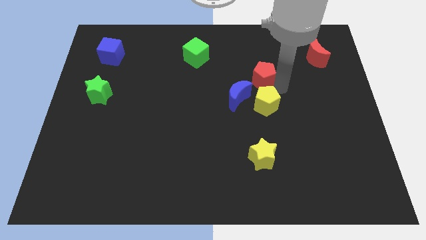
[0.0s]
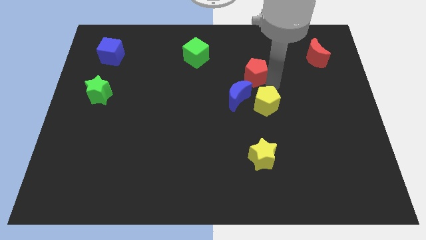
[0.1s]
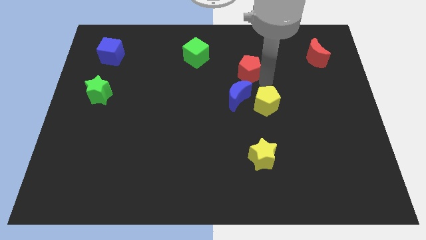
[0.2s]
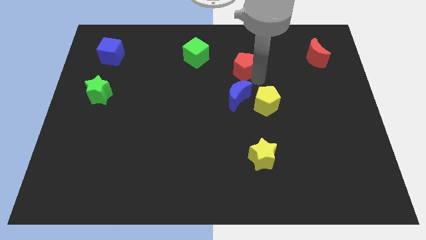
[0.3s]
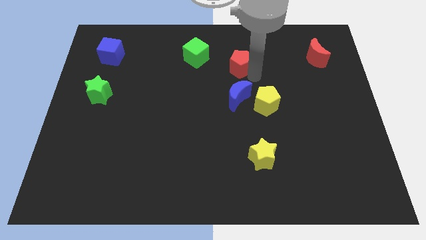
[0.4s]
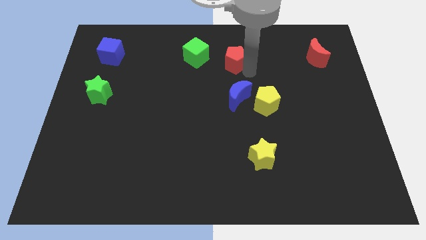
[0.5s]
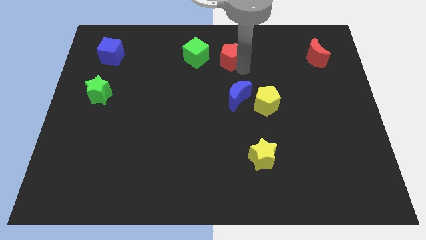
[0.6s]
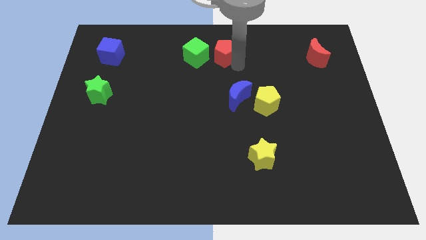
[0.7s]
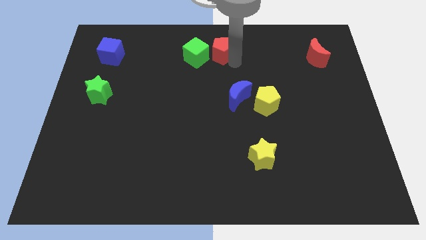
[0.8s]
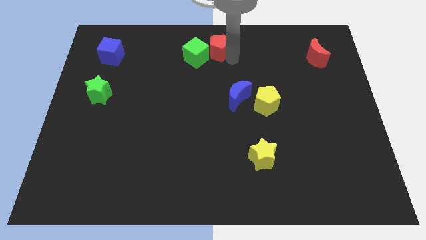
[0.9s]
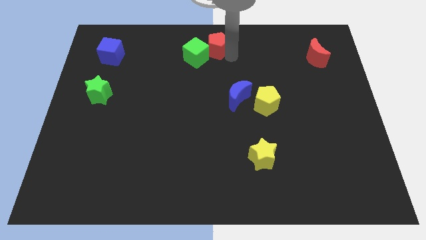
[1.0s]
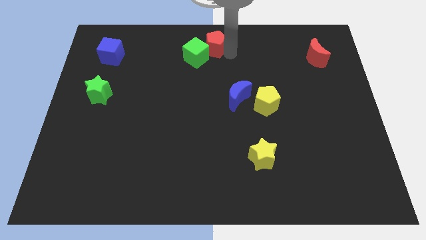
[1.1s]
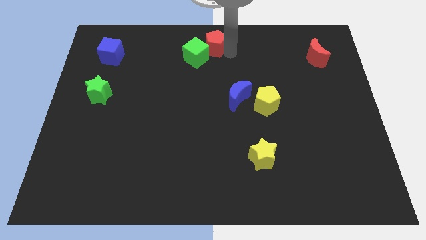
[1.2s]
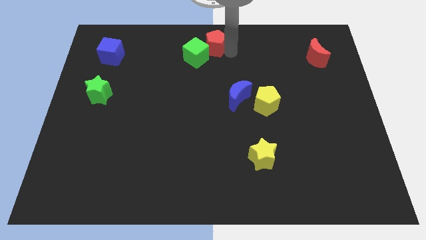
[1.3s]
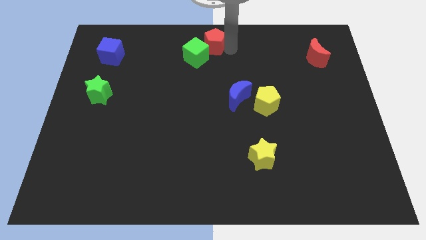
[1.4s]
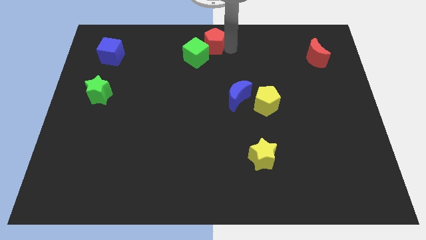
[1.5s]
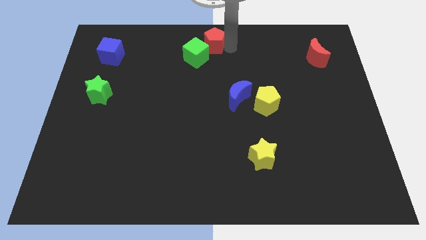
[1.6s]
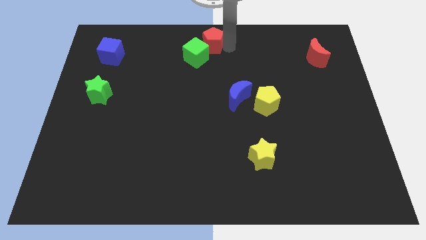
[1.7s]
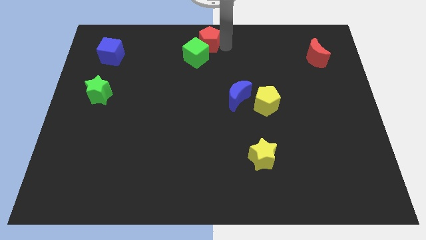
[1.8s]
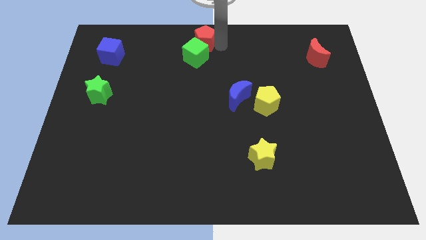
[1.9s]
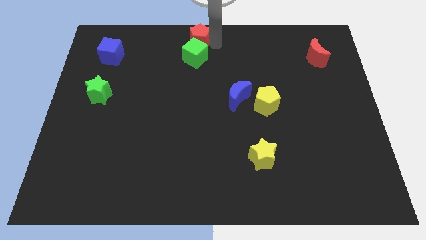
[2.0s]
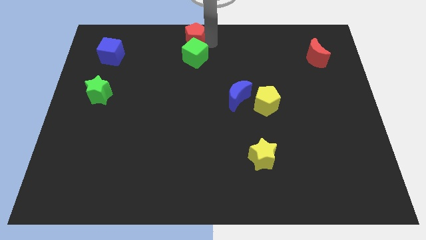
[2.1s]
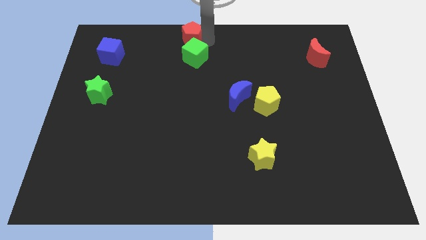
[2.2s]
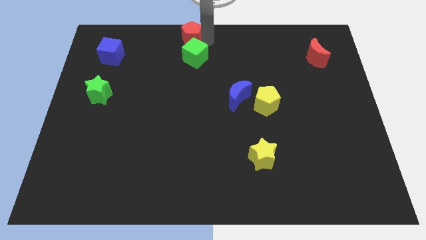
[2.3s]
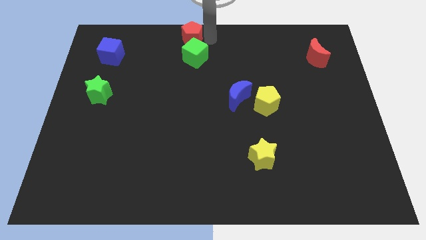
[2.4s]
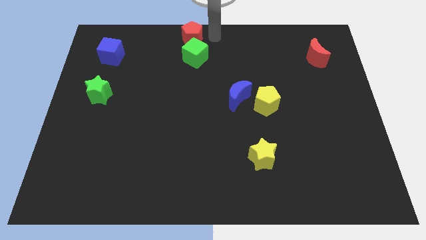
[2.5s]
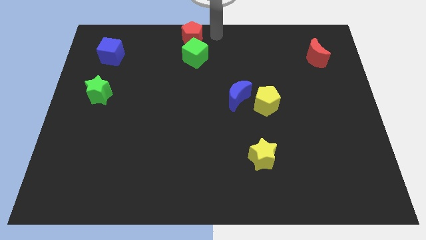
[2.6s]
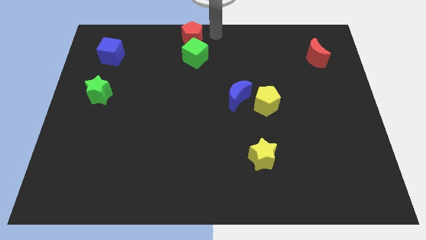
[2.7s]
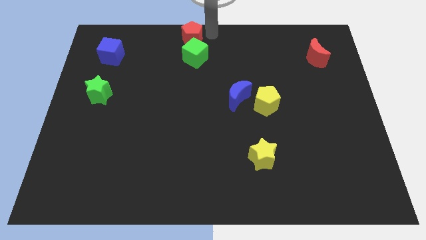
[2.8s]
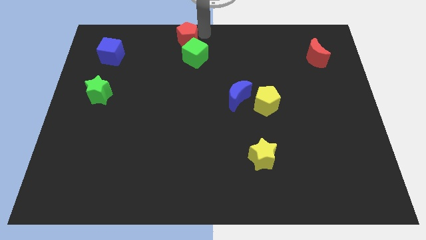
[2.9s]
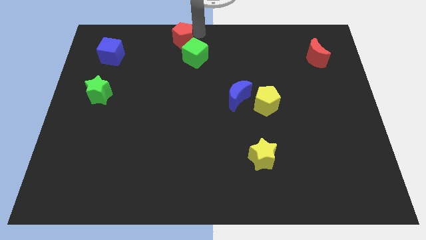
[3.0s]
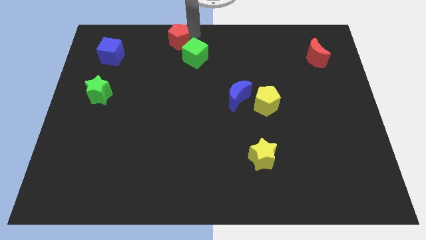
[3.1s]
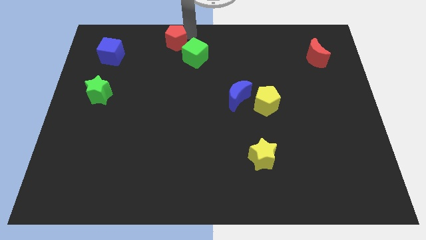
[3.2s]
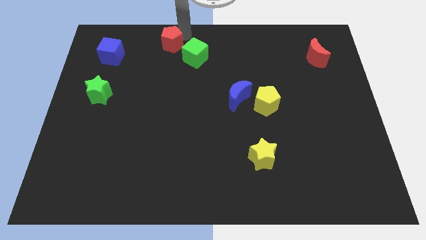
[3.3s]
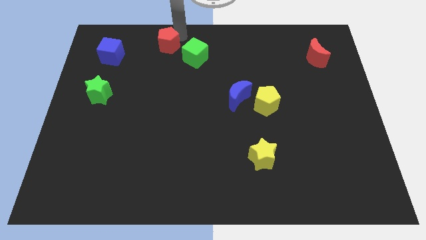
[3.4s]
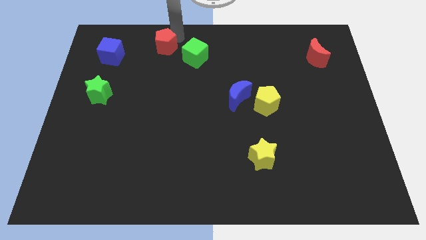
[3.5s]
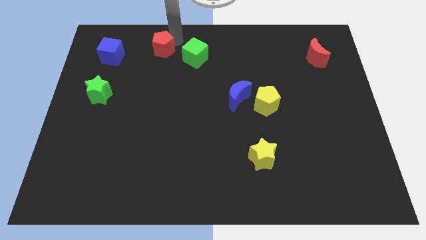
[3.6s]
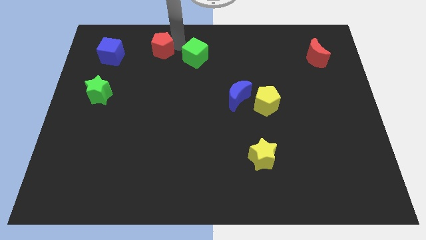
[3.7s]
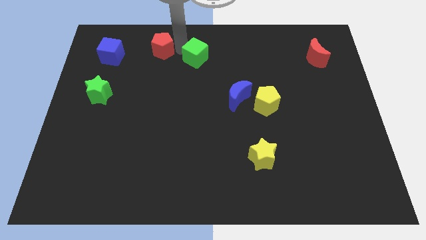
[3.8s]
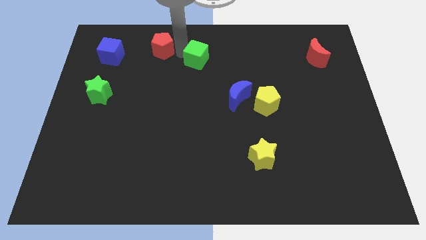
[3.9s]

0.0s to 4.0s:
move the red pentagon on the top left of the green cube diagonally

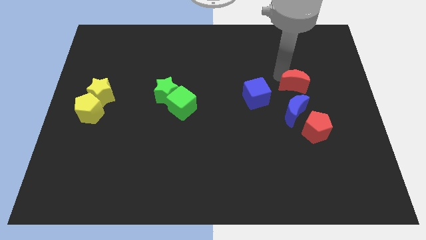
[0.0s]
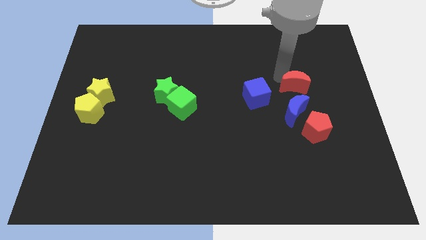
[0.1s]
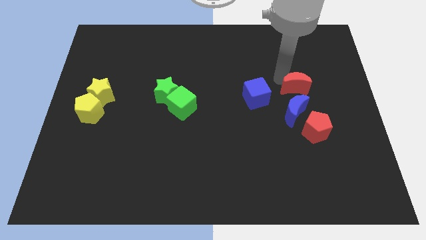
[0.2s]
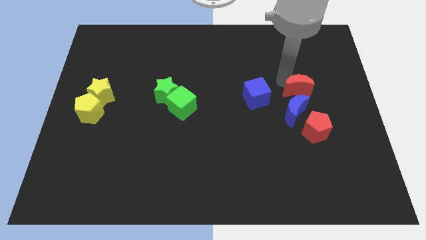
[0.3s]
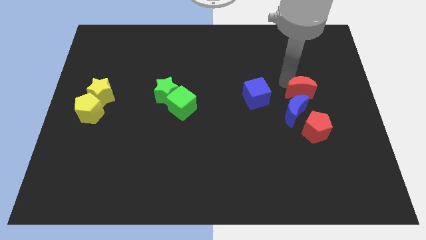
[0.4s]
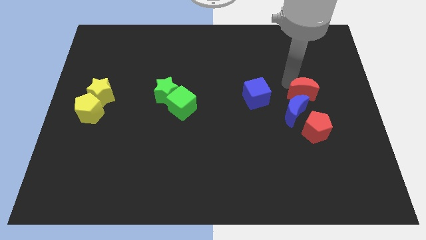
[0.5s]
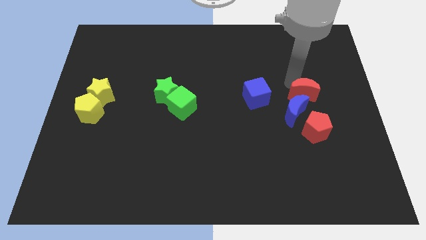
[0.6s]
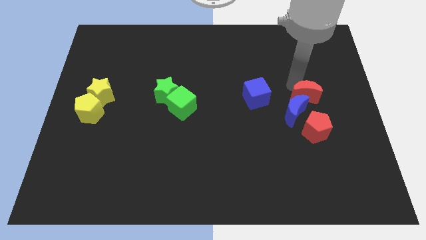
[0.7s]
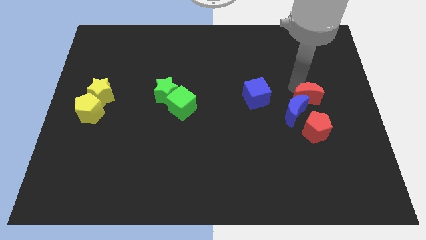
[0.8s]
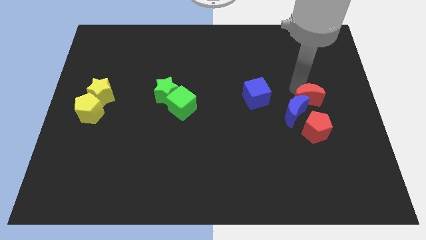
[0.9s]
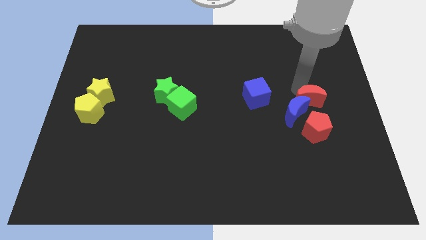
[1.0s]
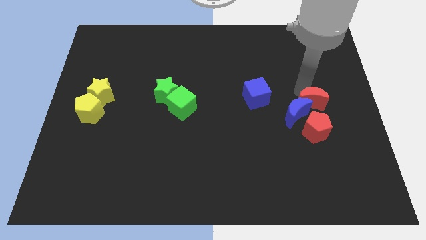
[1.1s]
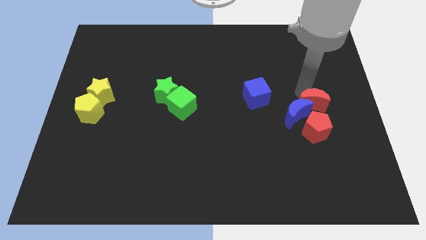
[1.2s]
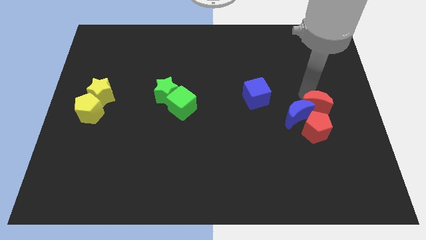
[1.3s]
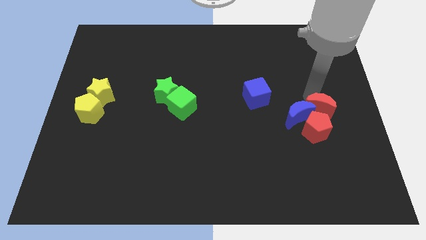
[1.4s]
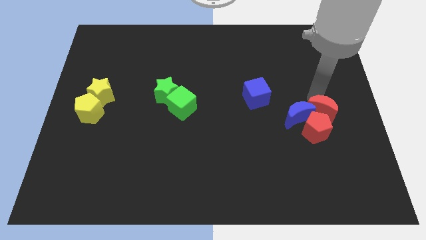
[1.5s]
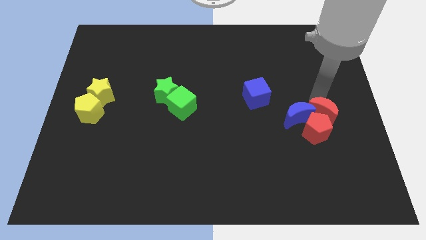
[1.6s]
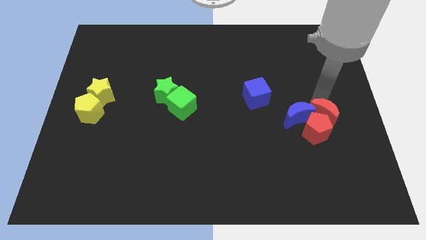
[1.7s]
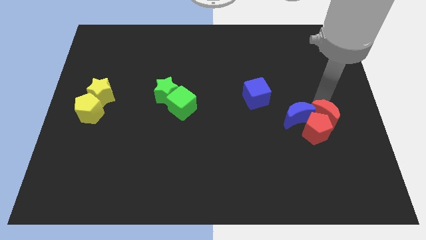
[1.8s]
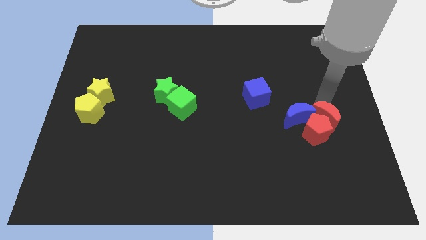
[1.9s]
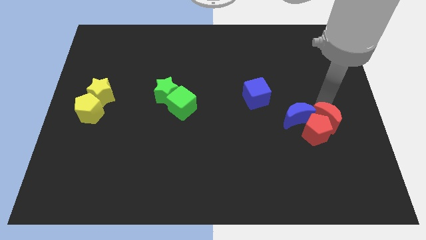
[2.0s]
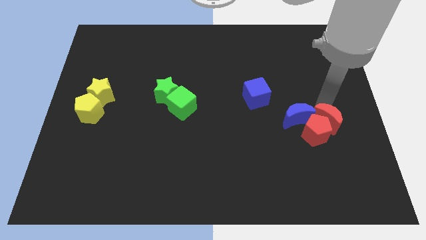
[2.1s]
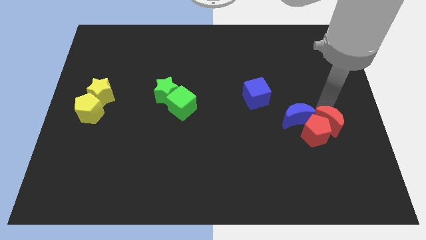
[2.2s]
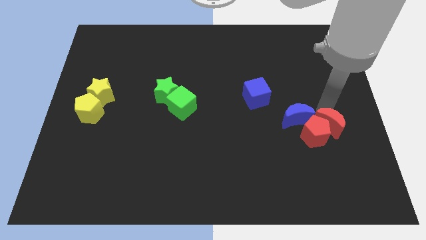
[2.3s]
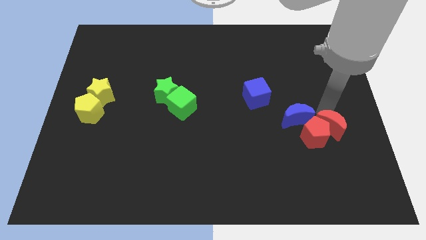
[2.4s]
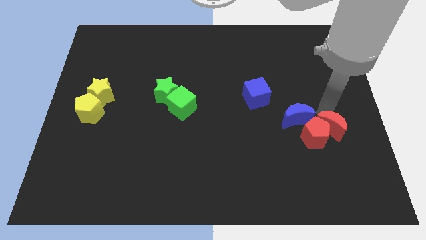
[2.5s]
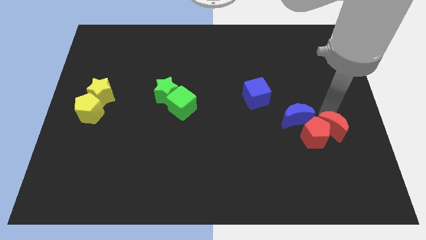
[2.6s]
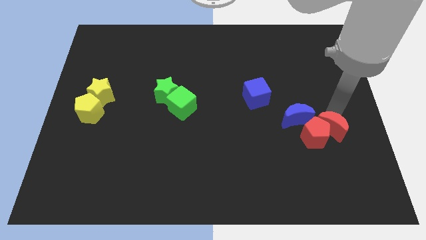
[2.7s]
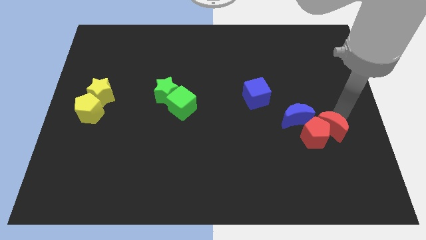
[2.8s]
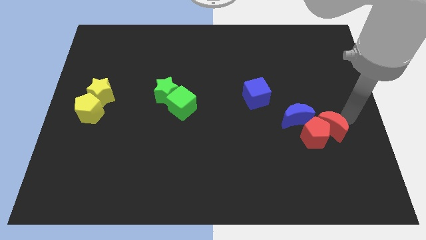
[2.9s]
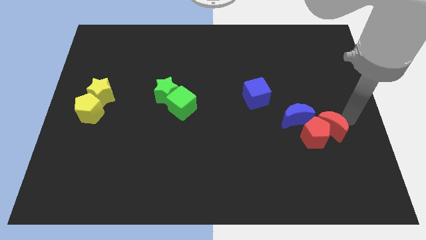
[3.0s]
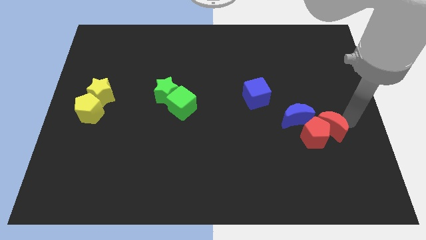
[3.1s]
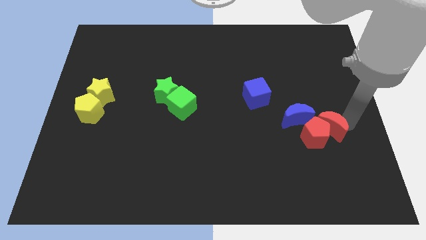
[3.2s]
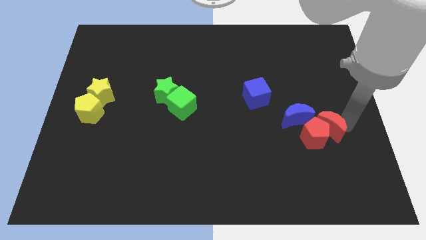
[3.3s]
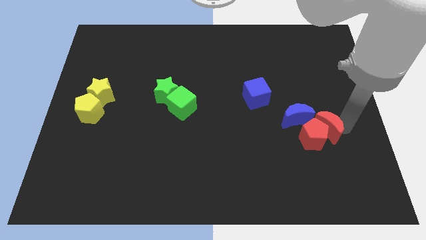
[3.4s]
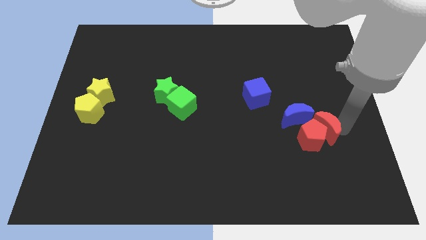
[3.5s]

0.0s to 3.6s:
place the red crescent to the right of the red pentagon

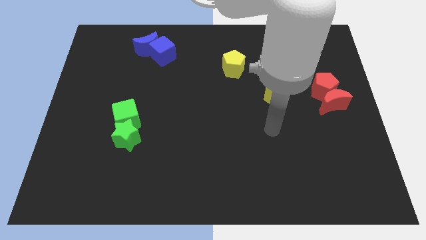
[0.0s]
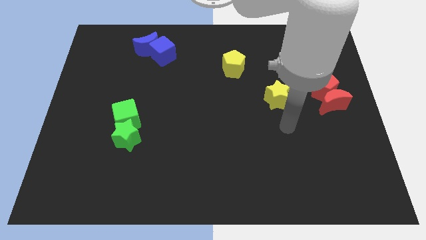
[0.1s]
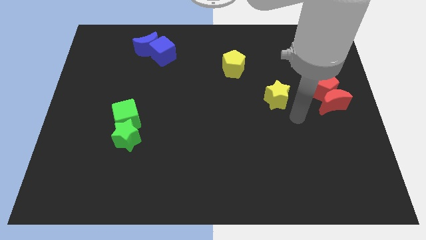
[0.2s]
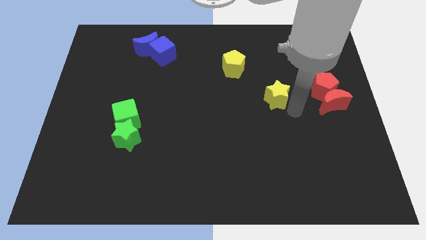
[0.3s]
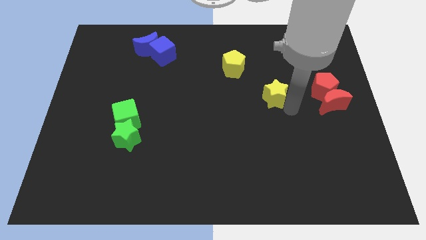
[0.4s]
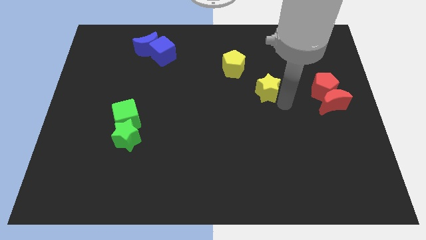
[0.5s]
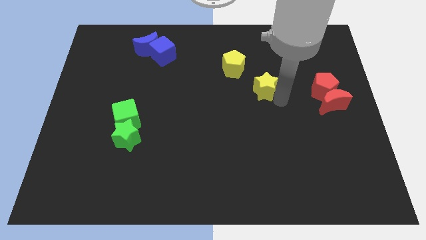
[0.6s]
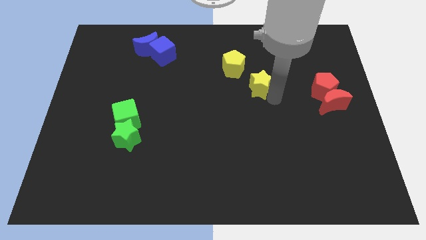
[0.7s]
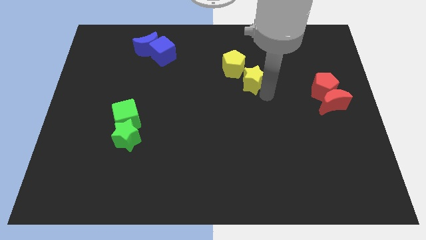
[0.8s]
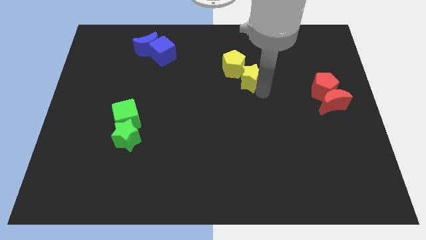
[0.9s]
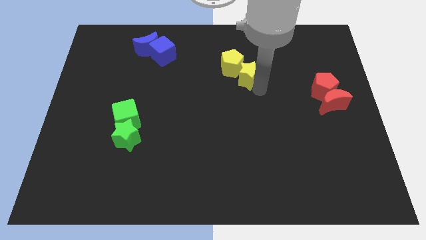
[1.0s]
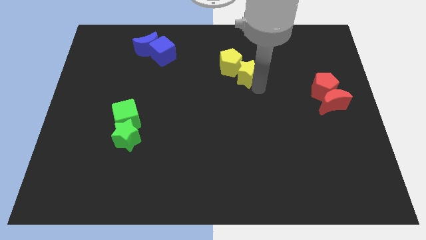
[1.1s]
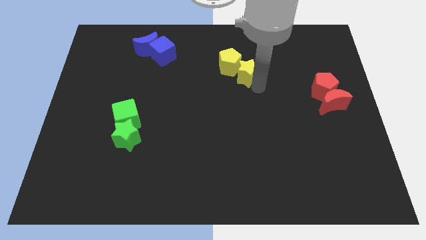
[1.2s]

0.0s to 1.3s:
place the yellow star close to the yellow pentagon
